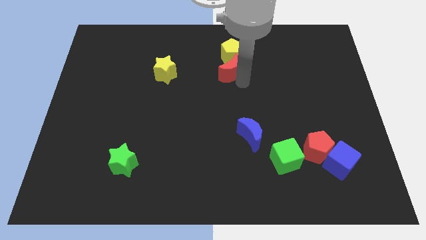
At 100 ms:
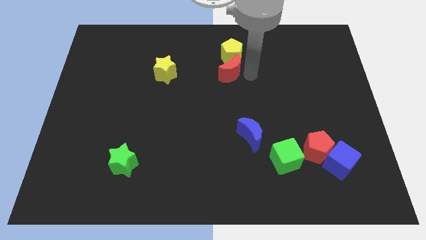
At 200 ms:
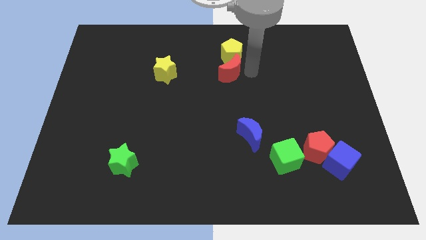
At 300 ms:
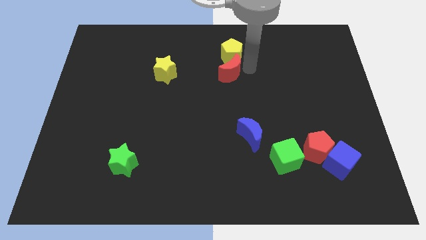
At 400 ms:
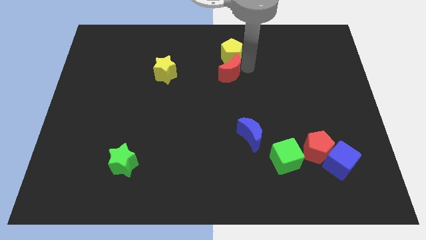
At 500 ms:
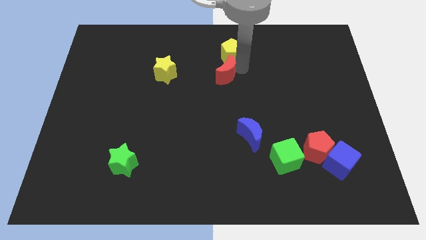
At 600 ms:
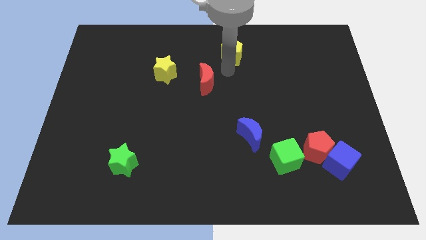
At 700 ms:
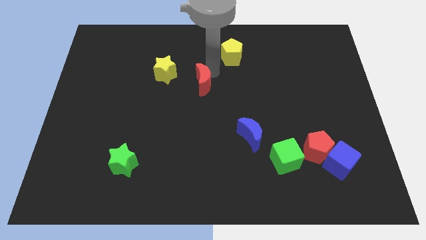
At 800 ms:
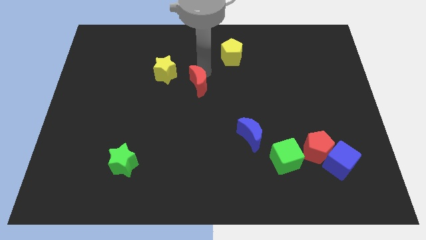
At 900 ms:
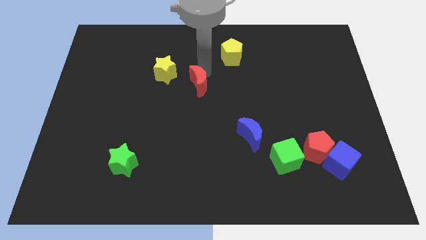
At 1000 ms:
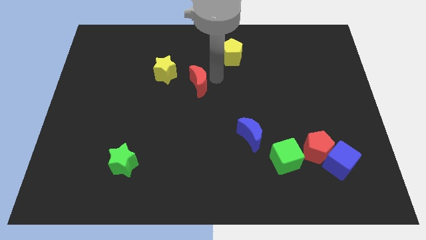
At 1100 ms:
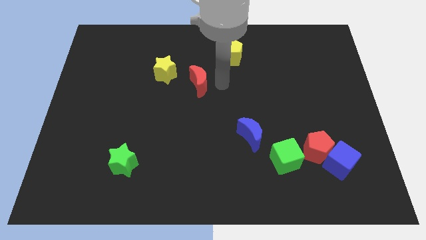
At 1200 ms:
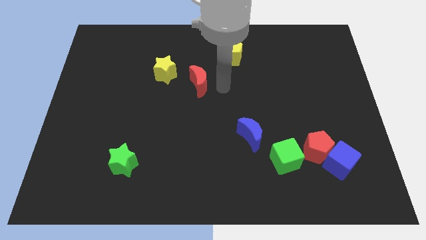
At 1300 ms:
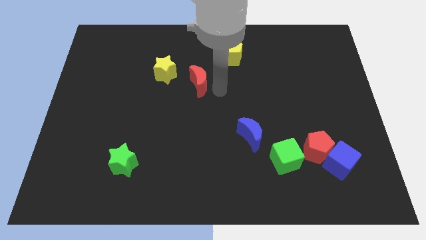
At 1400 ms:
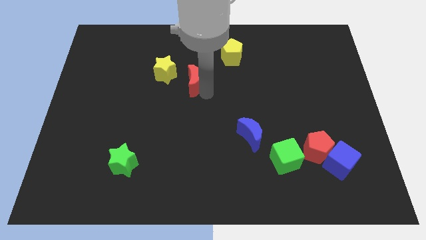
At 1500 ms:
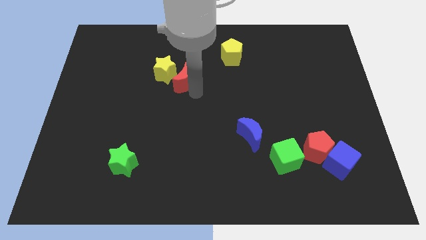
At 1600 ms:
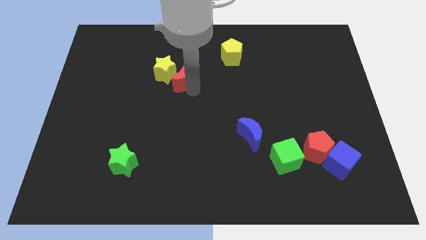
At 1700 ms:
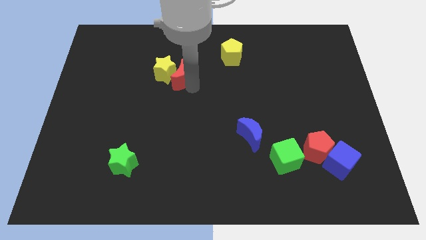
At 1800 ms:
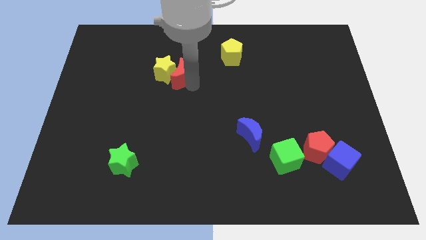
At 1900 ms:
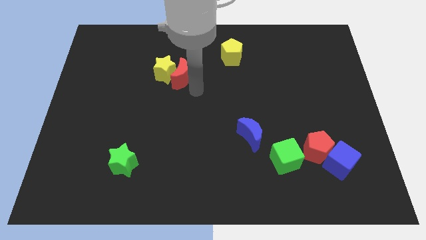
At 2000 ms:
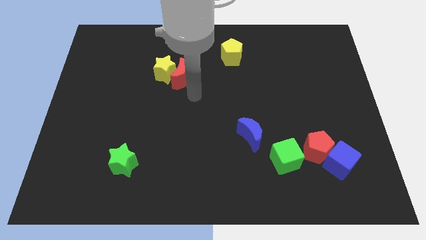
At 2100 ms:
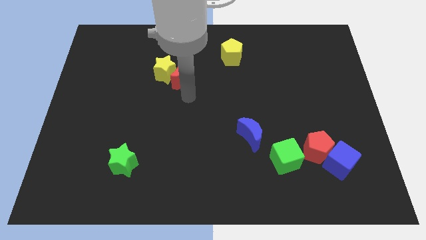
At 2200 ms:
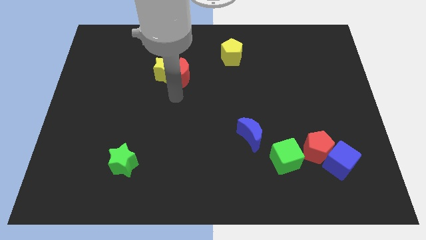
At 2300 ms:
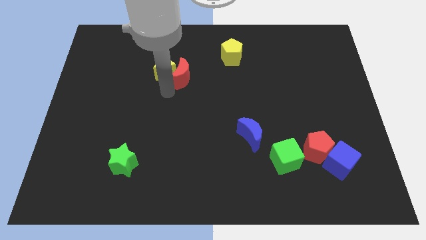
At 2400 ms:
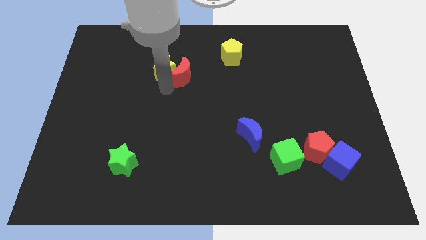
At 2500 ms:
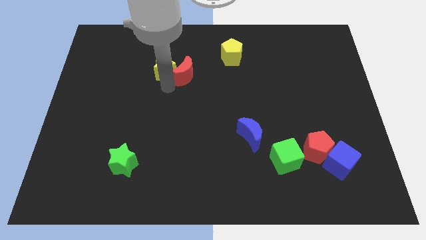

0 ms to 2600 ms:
move the red moon to the right of the yellow star

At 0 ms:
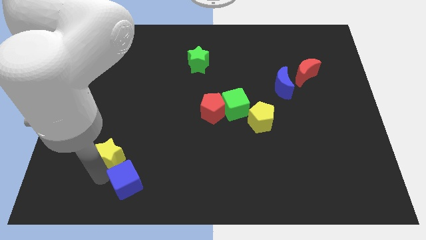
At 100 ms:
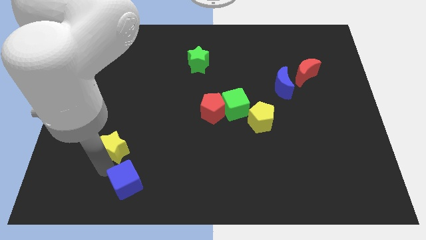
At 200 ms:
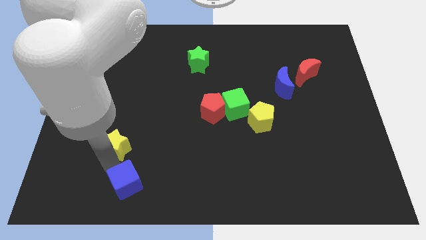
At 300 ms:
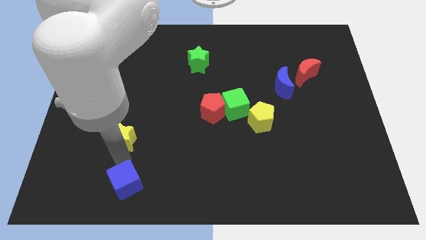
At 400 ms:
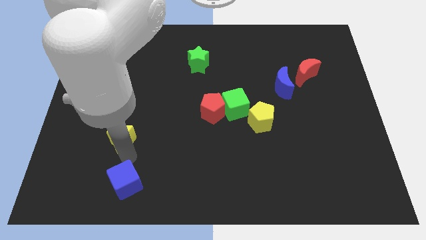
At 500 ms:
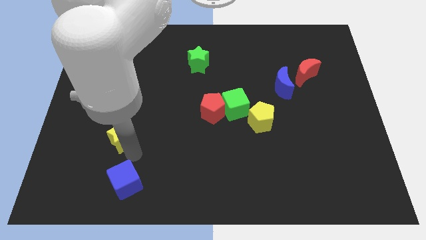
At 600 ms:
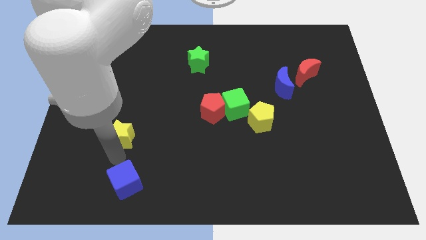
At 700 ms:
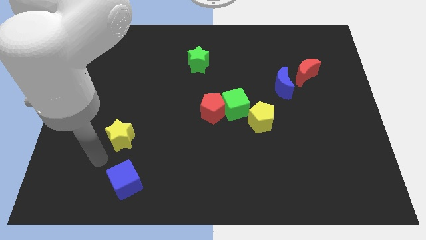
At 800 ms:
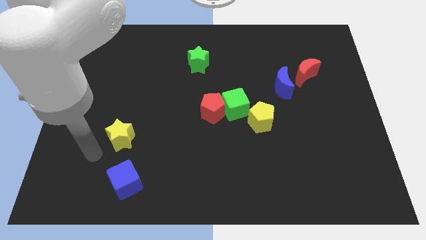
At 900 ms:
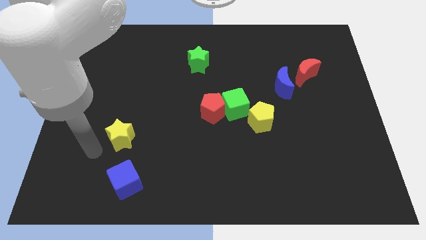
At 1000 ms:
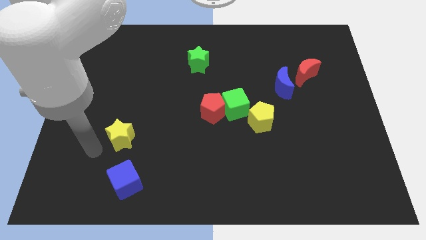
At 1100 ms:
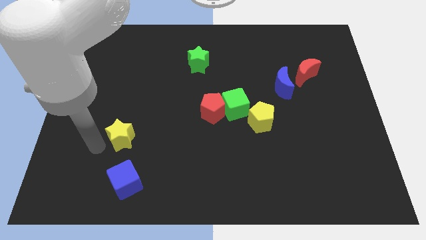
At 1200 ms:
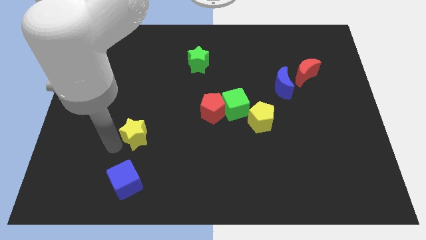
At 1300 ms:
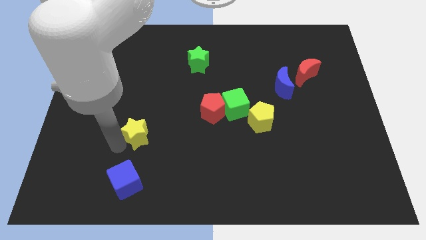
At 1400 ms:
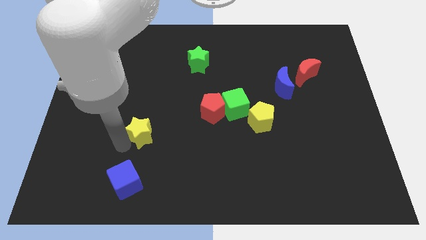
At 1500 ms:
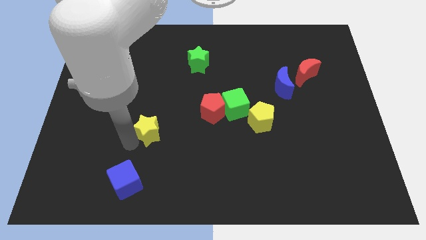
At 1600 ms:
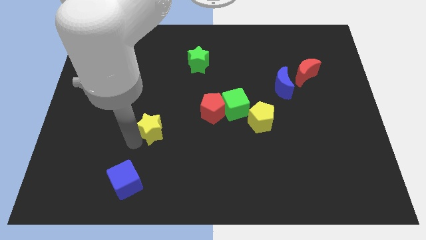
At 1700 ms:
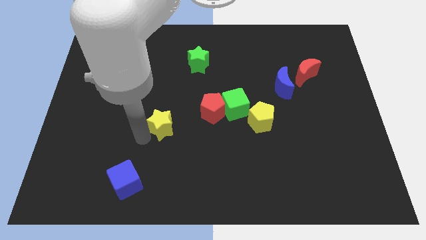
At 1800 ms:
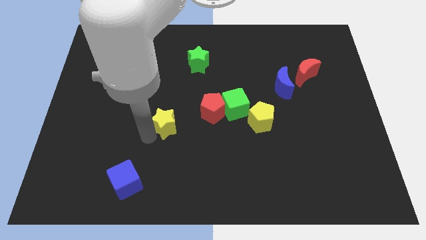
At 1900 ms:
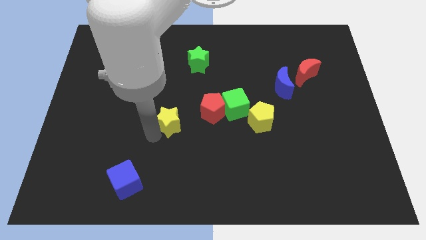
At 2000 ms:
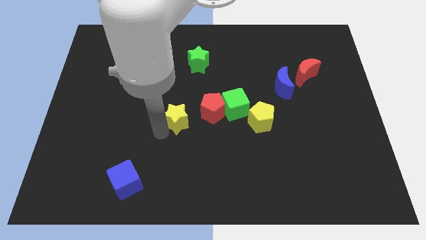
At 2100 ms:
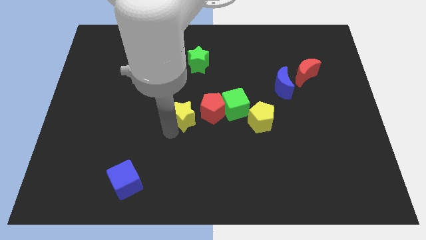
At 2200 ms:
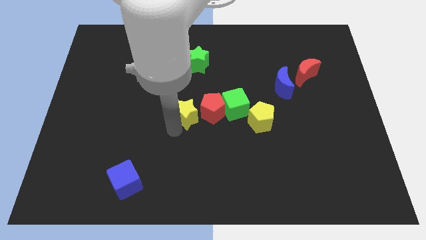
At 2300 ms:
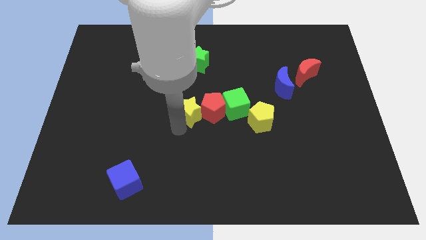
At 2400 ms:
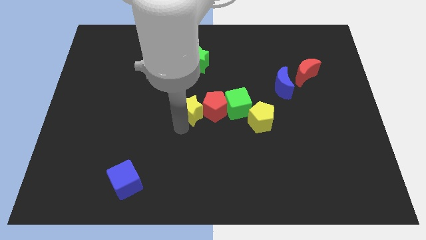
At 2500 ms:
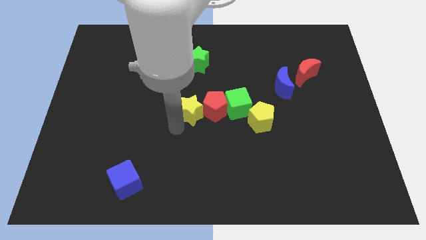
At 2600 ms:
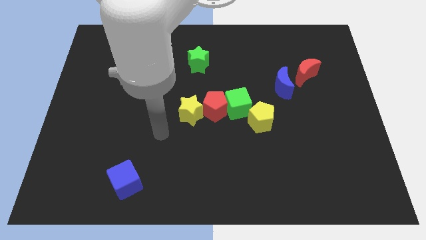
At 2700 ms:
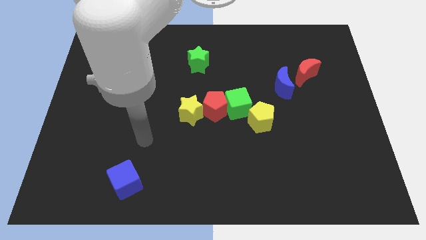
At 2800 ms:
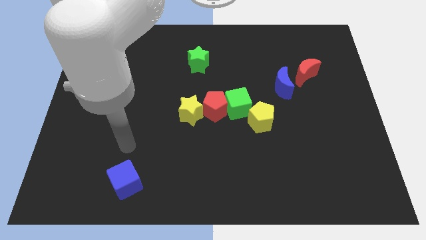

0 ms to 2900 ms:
move the yellow star to the left of the red pentagon

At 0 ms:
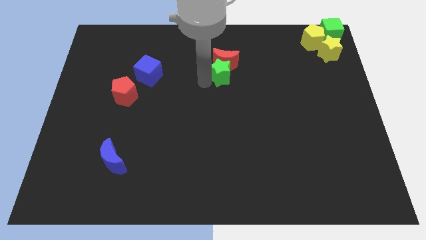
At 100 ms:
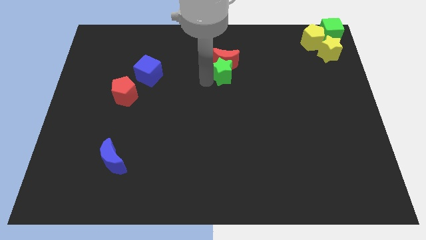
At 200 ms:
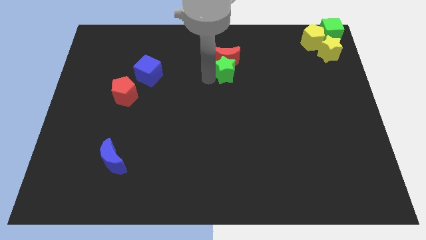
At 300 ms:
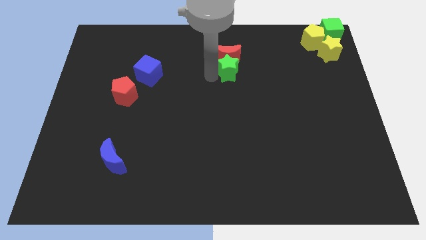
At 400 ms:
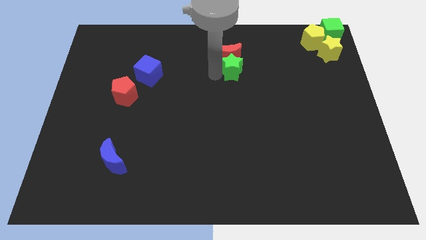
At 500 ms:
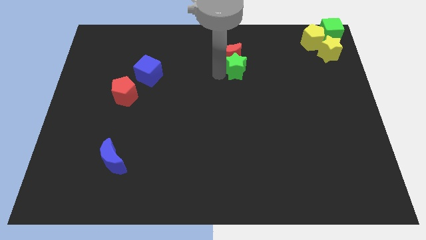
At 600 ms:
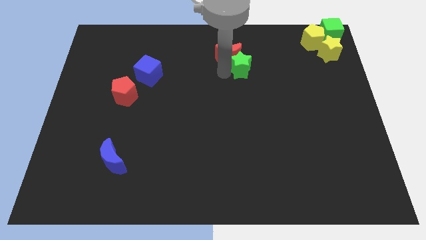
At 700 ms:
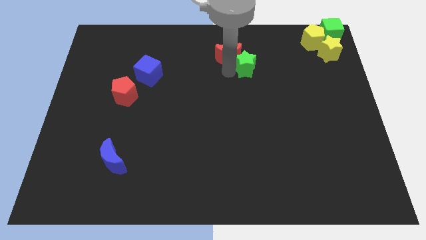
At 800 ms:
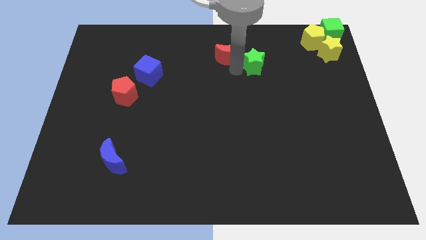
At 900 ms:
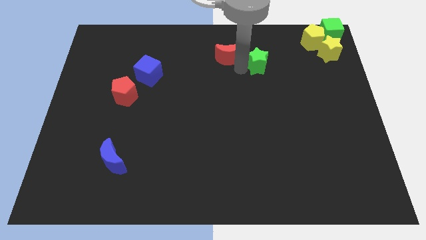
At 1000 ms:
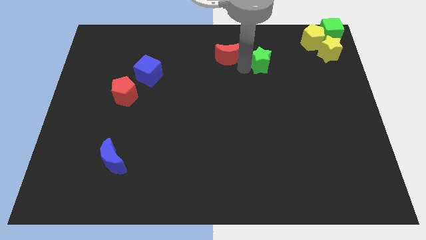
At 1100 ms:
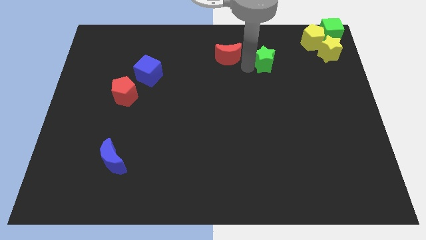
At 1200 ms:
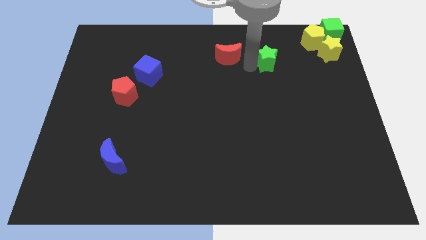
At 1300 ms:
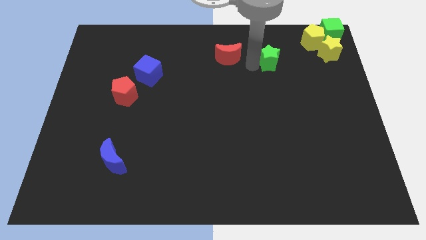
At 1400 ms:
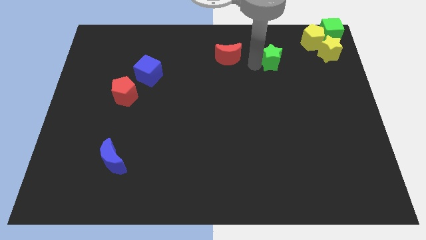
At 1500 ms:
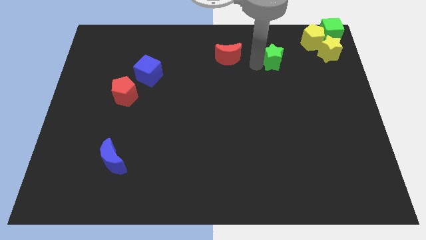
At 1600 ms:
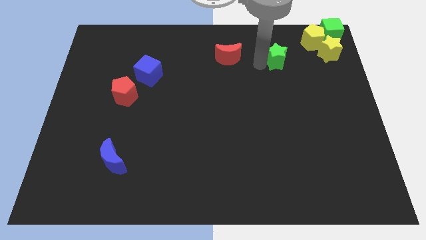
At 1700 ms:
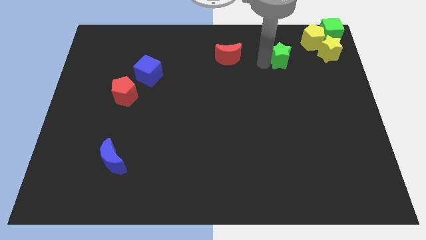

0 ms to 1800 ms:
seprate the green star from red crescent

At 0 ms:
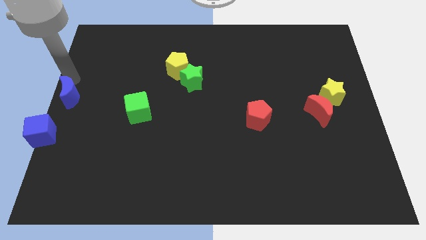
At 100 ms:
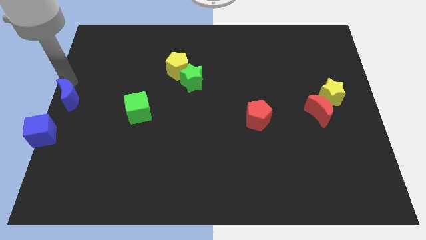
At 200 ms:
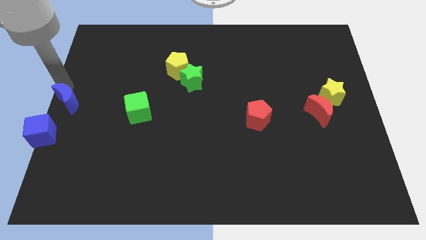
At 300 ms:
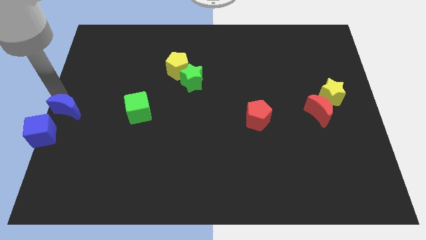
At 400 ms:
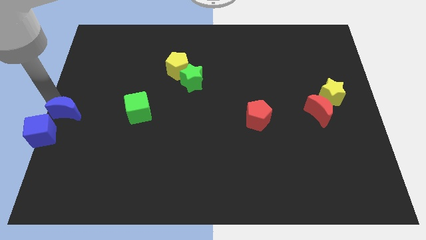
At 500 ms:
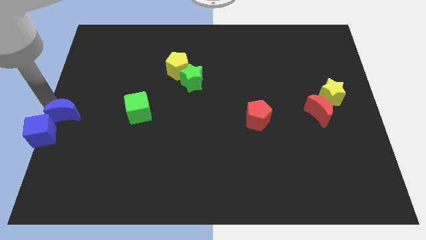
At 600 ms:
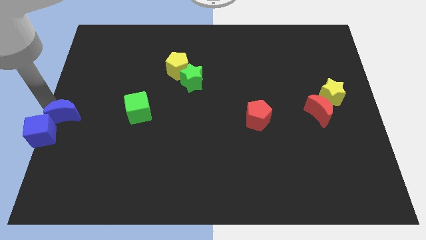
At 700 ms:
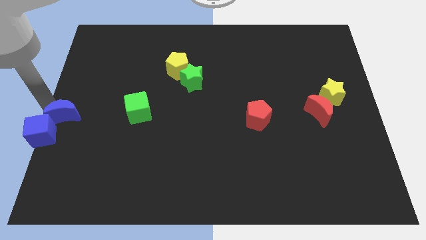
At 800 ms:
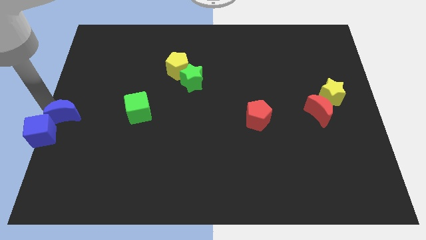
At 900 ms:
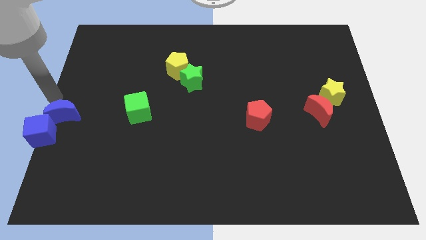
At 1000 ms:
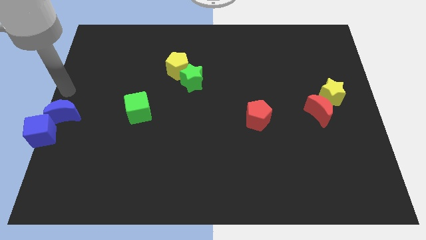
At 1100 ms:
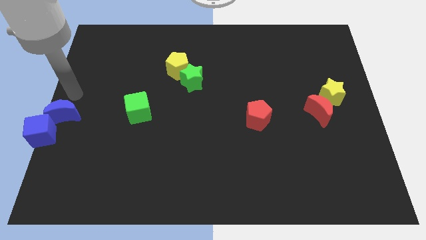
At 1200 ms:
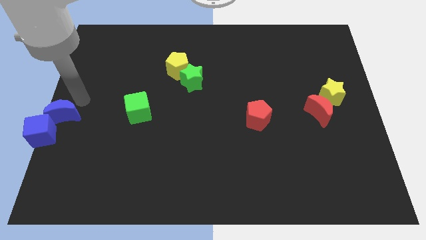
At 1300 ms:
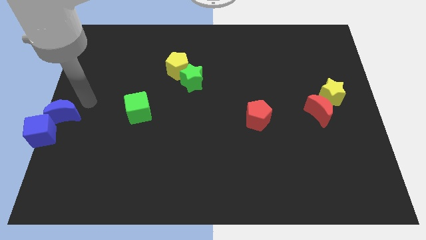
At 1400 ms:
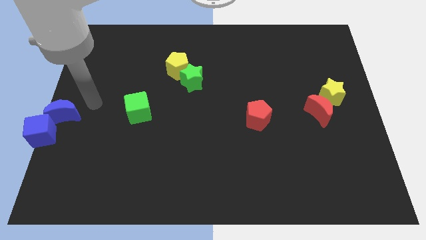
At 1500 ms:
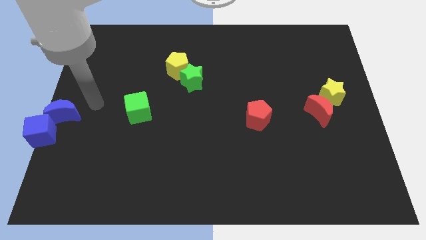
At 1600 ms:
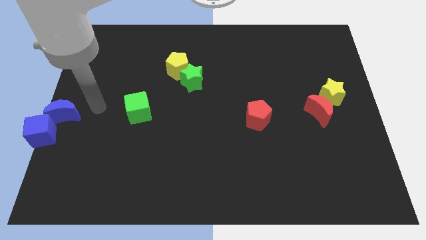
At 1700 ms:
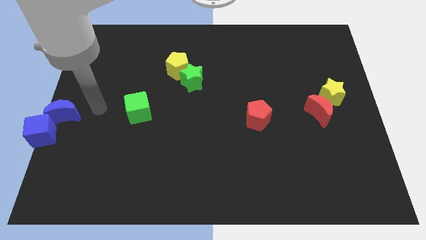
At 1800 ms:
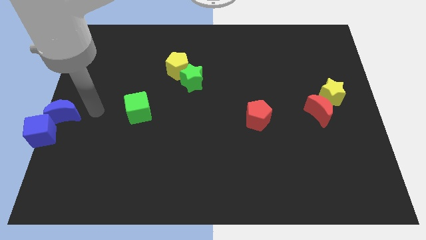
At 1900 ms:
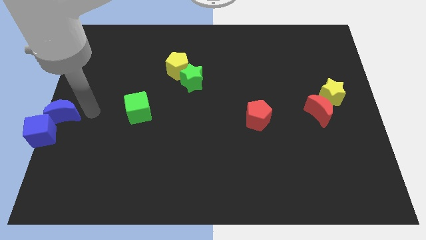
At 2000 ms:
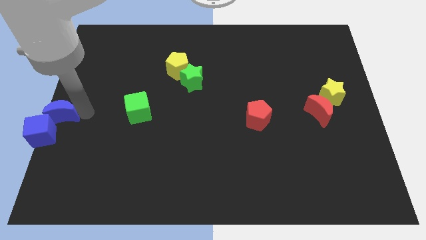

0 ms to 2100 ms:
place blue moon at the left center of the board
